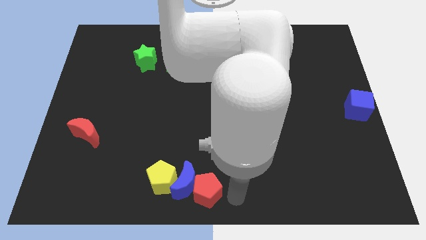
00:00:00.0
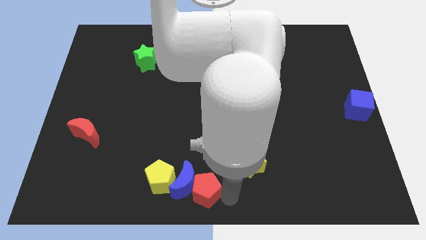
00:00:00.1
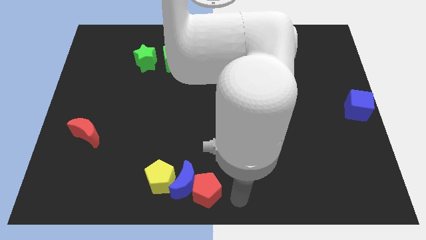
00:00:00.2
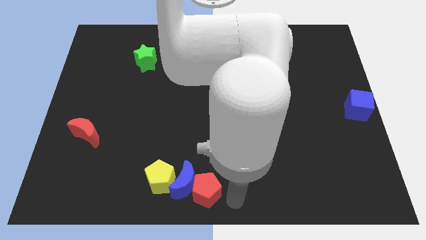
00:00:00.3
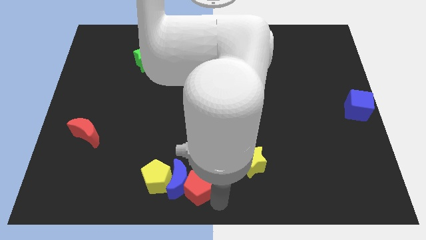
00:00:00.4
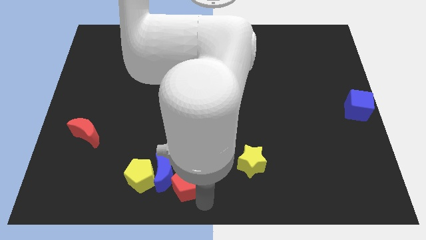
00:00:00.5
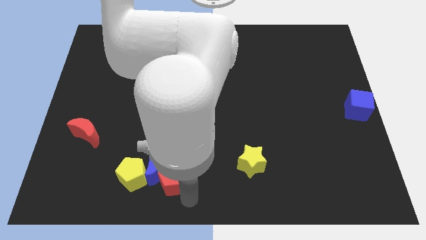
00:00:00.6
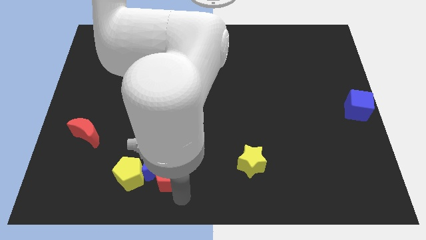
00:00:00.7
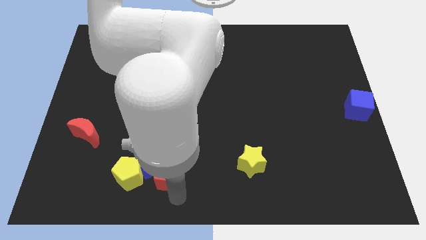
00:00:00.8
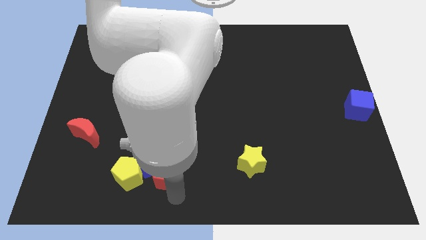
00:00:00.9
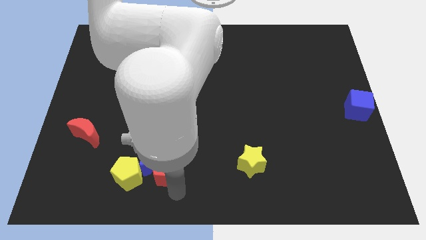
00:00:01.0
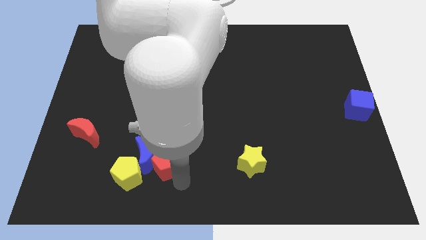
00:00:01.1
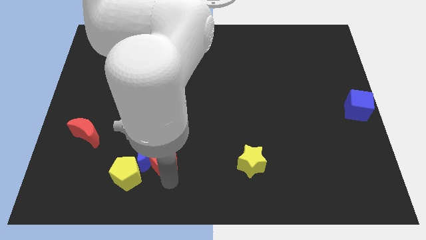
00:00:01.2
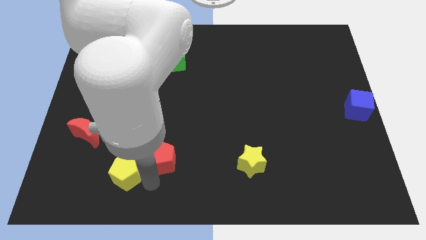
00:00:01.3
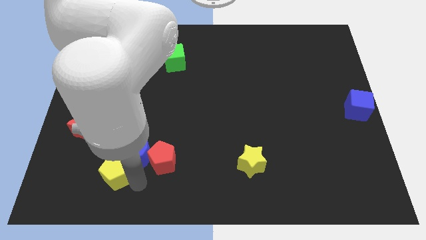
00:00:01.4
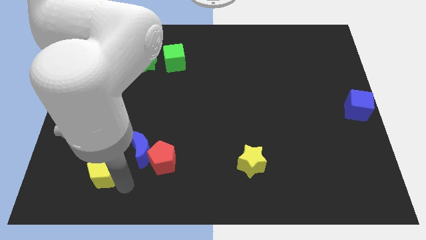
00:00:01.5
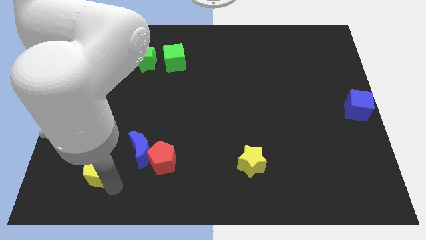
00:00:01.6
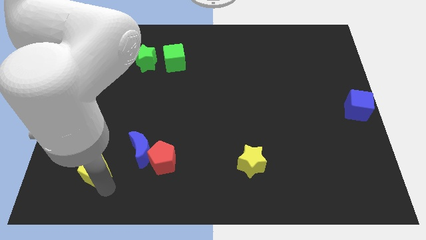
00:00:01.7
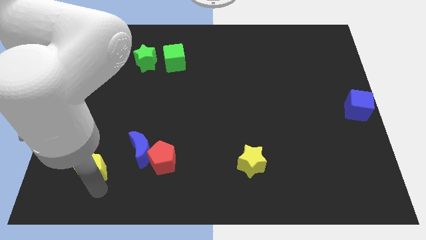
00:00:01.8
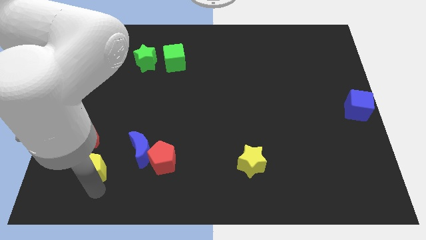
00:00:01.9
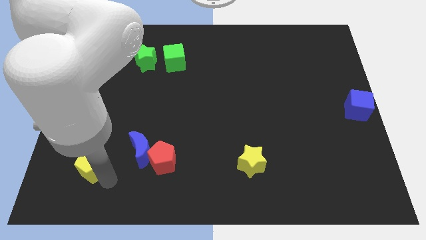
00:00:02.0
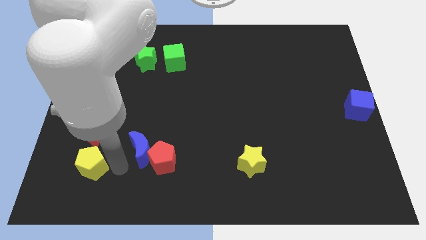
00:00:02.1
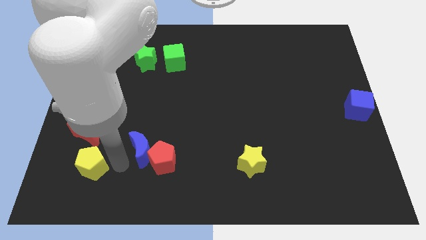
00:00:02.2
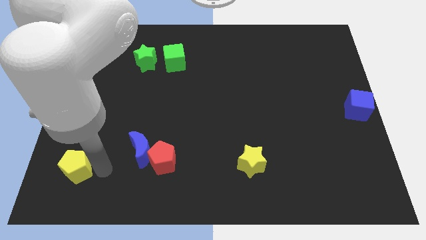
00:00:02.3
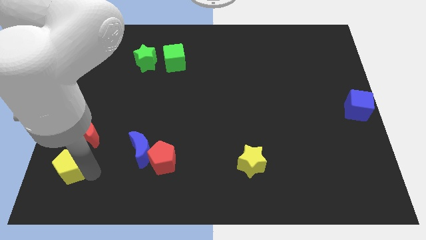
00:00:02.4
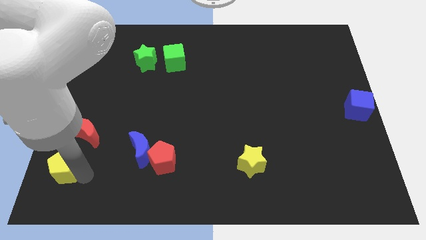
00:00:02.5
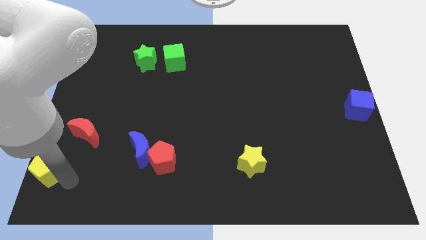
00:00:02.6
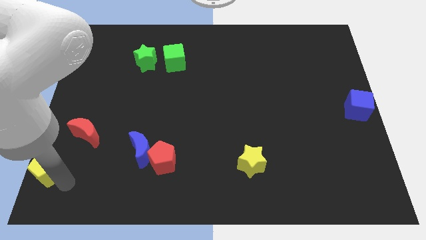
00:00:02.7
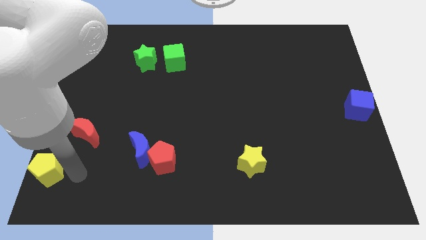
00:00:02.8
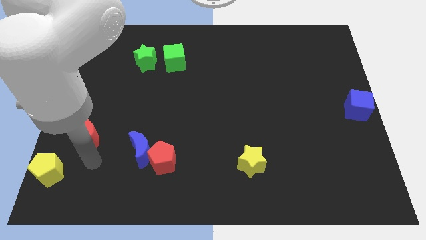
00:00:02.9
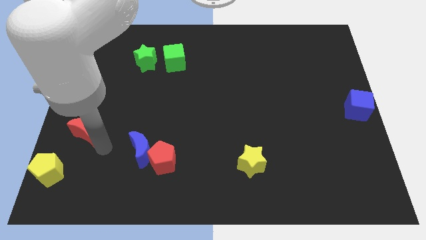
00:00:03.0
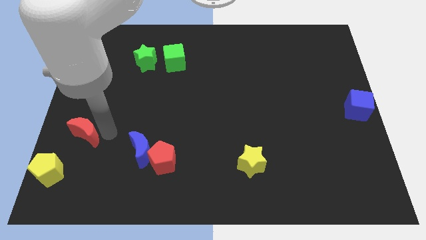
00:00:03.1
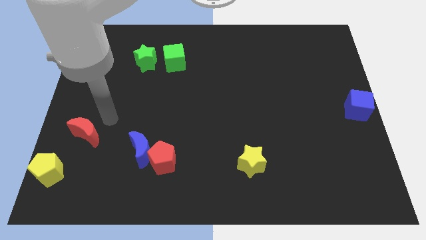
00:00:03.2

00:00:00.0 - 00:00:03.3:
push the yellow pentagon near to the bottom left corner

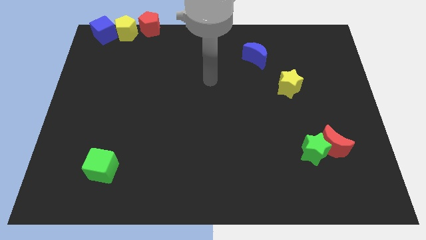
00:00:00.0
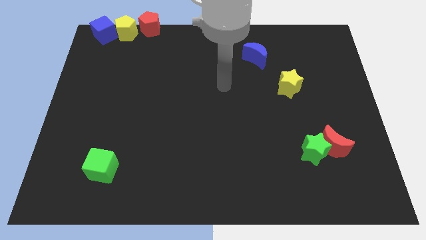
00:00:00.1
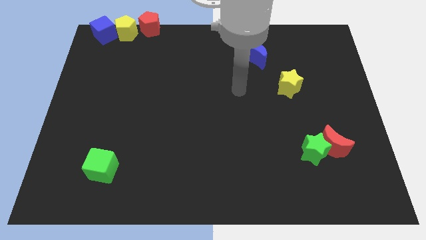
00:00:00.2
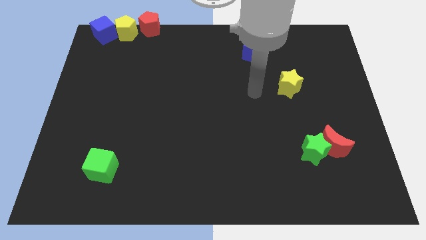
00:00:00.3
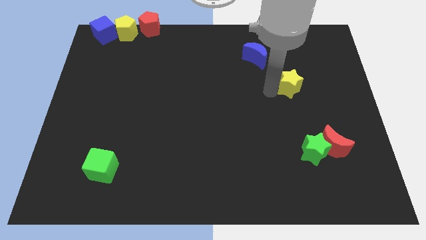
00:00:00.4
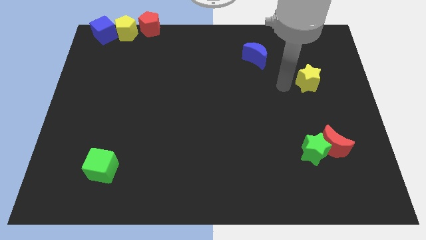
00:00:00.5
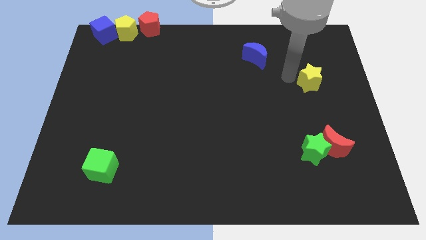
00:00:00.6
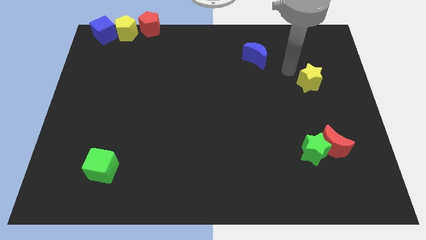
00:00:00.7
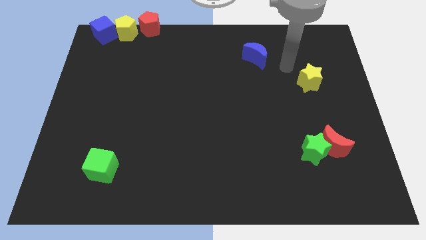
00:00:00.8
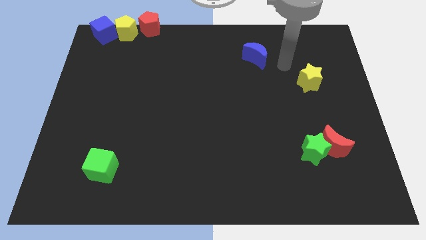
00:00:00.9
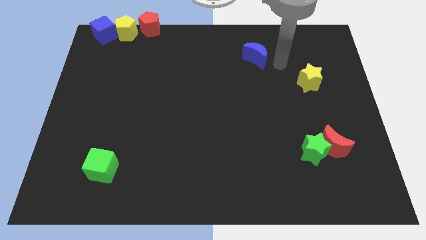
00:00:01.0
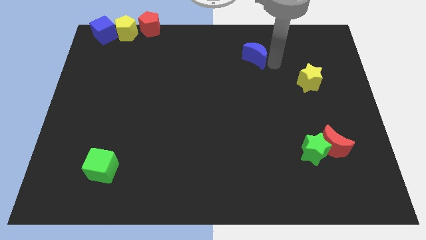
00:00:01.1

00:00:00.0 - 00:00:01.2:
push the yellow star slightly to the right

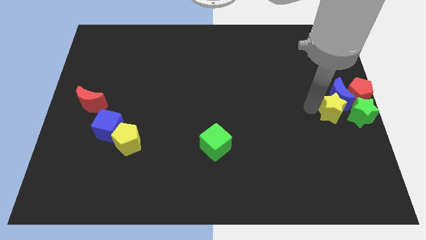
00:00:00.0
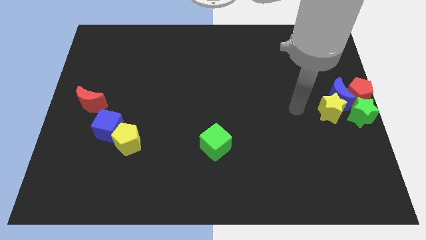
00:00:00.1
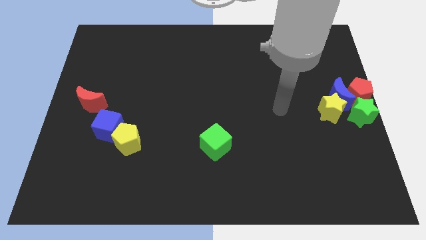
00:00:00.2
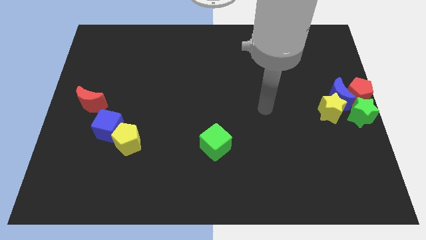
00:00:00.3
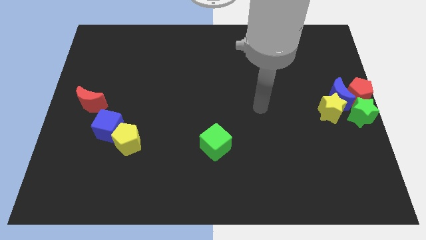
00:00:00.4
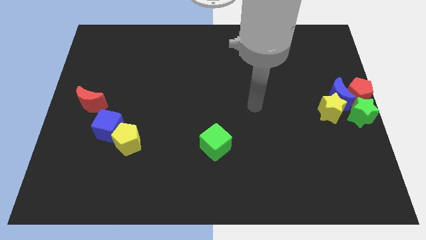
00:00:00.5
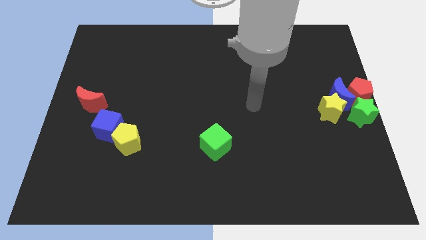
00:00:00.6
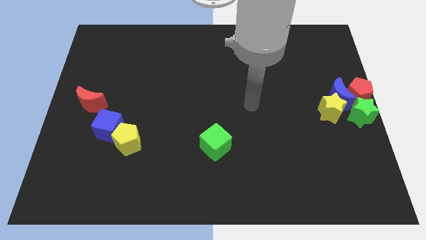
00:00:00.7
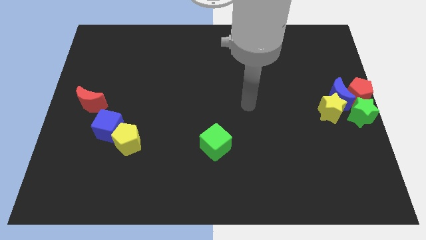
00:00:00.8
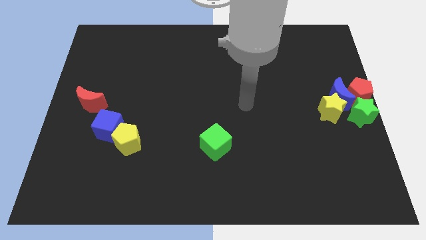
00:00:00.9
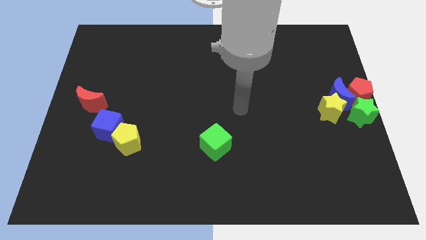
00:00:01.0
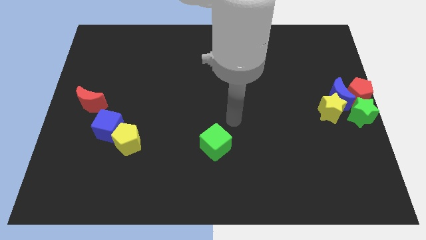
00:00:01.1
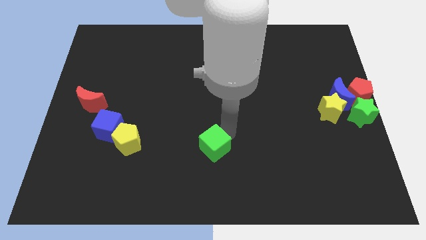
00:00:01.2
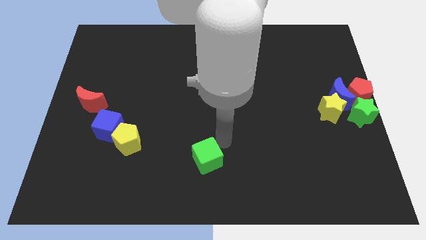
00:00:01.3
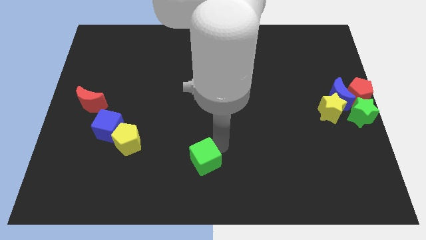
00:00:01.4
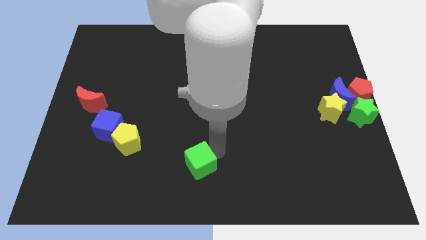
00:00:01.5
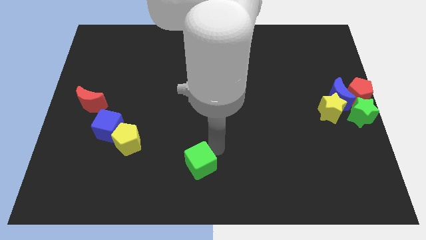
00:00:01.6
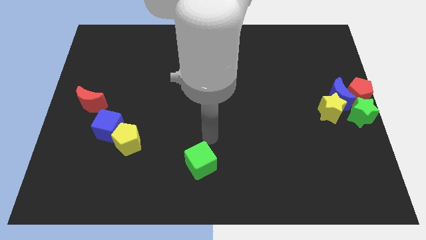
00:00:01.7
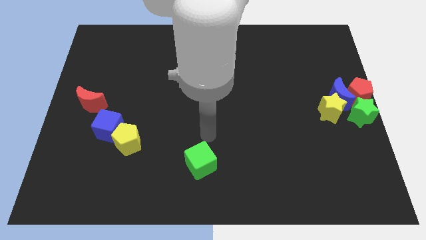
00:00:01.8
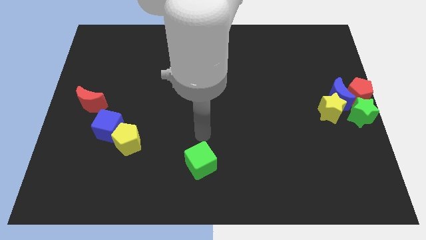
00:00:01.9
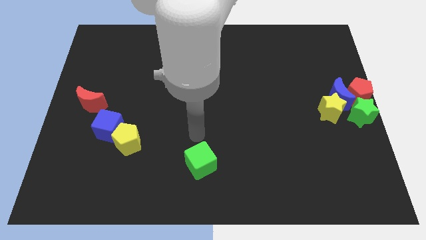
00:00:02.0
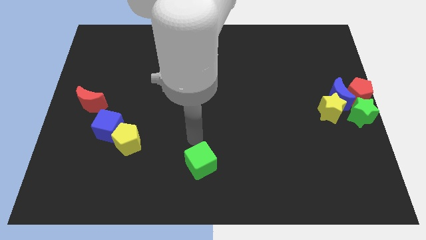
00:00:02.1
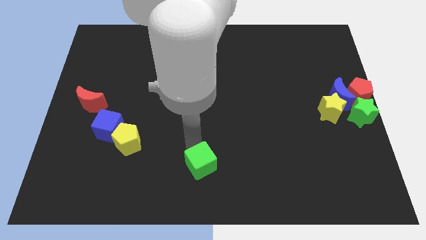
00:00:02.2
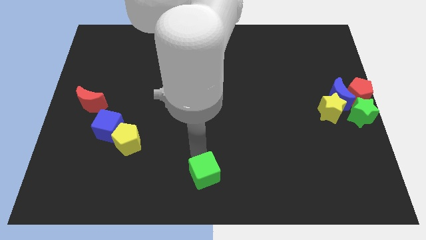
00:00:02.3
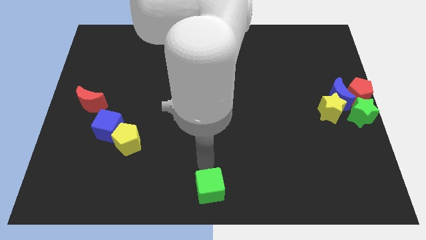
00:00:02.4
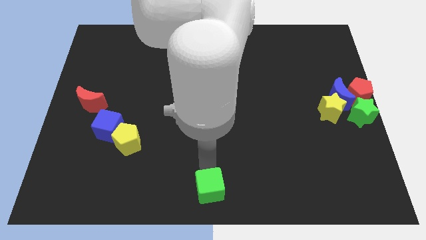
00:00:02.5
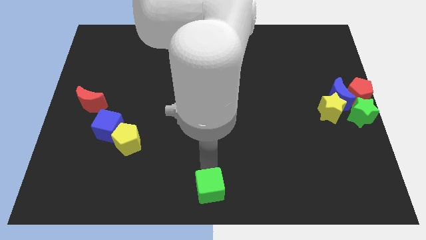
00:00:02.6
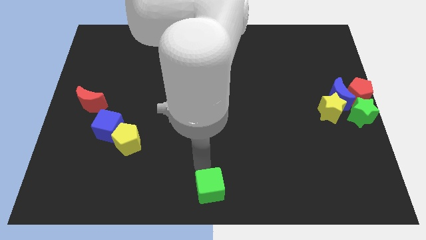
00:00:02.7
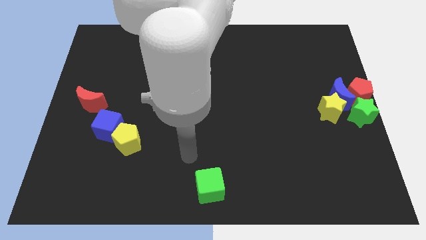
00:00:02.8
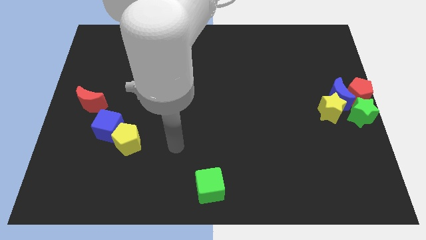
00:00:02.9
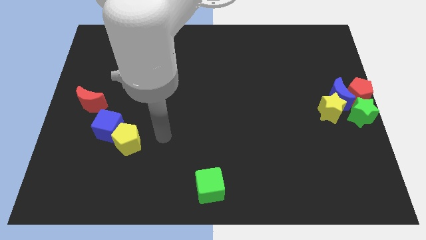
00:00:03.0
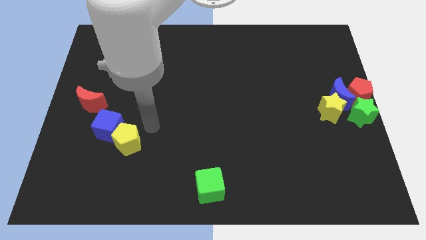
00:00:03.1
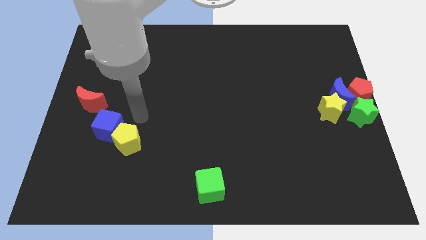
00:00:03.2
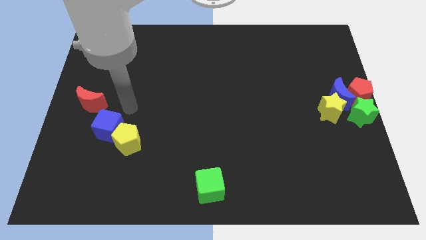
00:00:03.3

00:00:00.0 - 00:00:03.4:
move green cube to the bottom center of the board

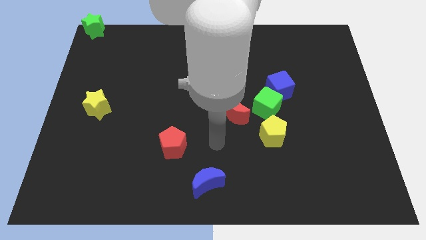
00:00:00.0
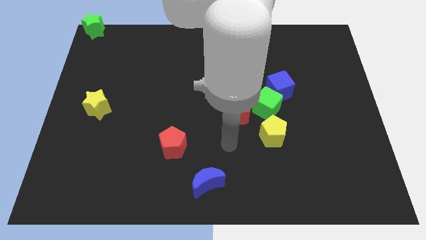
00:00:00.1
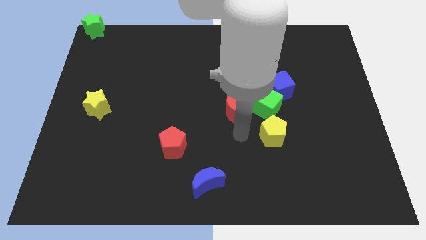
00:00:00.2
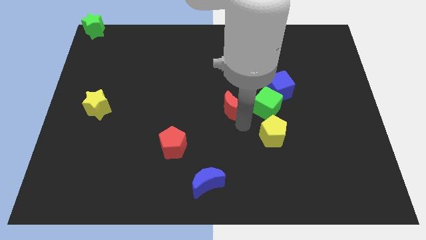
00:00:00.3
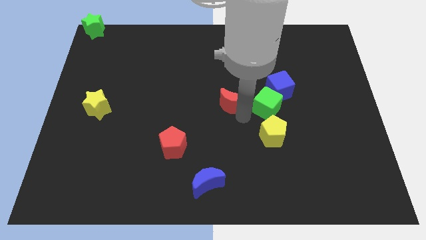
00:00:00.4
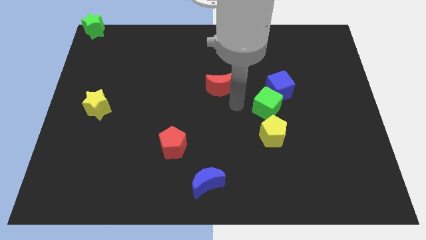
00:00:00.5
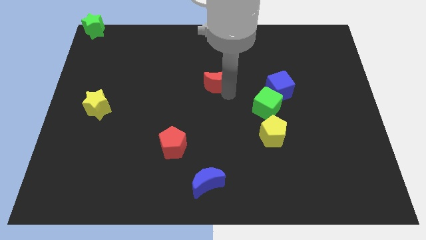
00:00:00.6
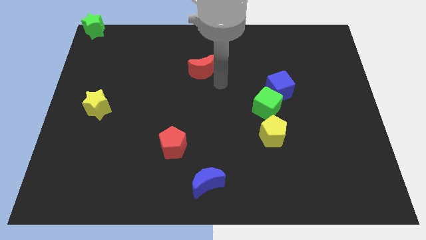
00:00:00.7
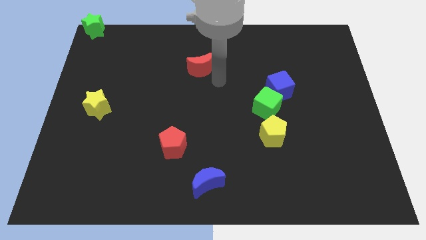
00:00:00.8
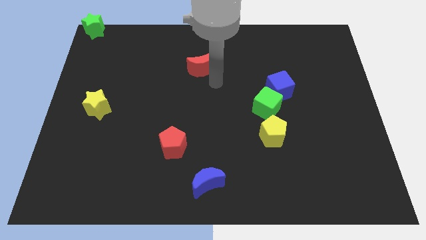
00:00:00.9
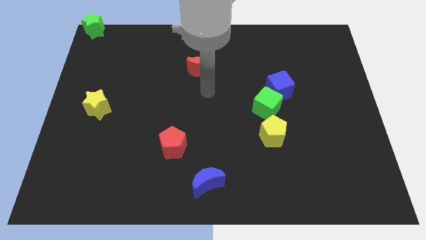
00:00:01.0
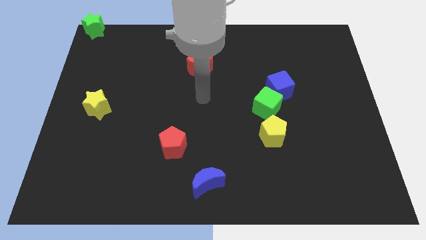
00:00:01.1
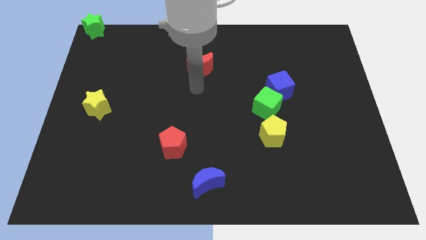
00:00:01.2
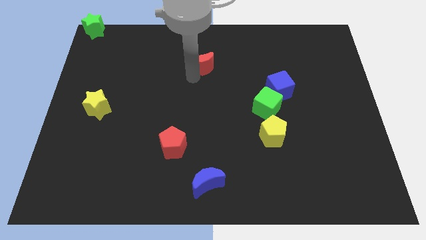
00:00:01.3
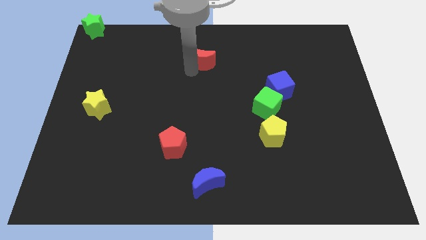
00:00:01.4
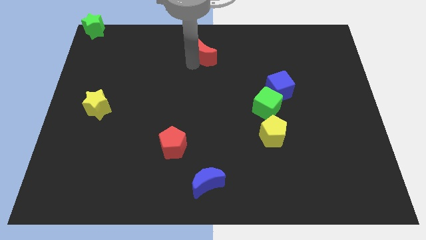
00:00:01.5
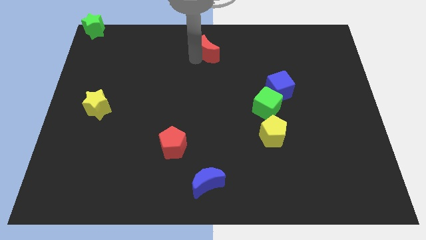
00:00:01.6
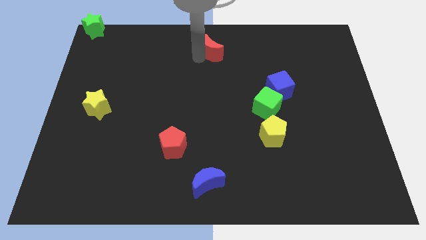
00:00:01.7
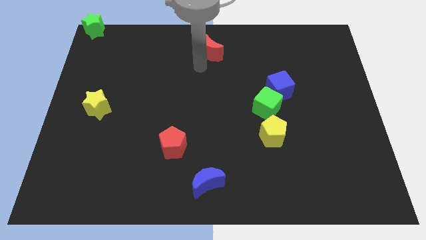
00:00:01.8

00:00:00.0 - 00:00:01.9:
slide the red crescent towards top
